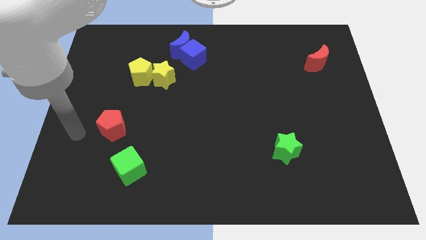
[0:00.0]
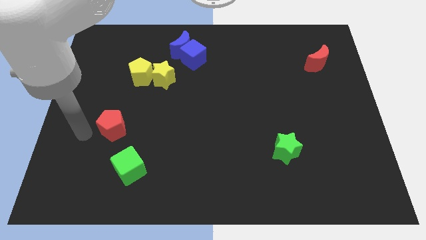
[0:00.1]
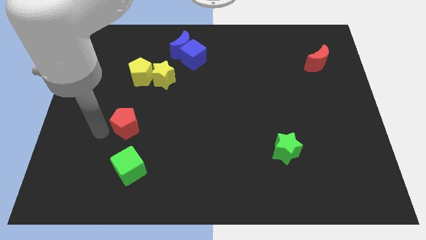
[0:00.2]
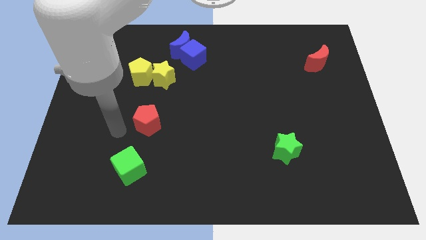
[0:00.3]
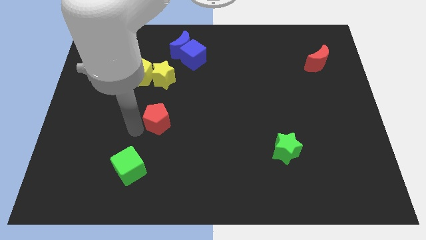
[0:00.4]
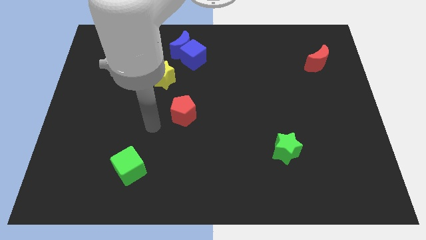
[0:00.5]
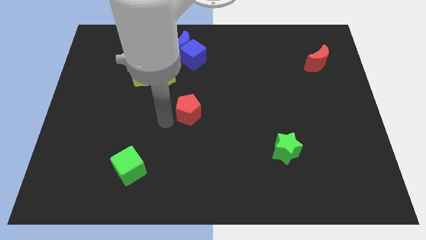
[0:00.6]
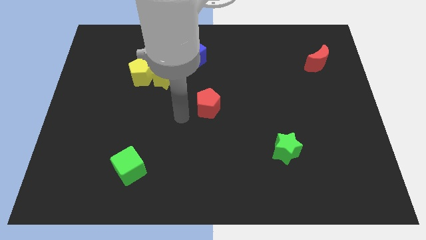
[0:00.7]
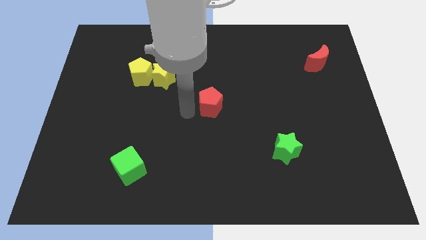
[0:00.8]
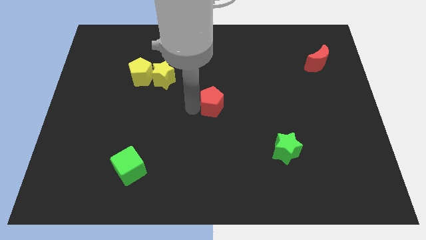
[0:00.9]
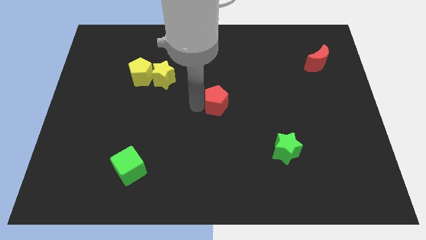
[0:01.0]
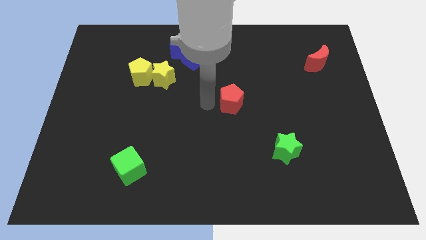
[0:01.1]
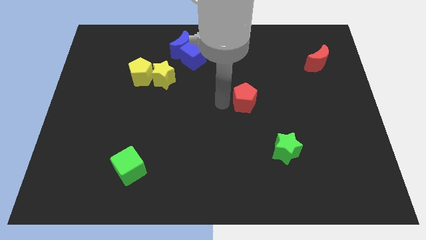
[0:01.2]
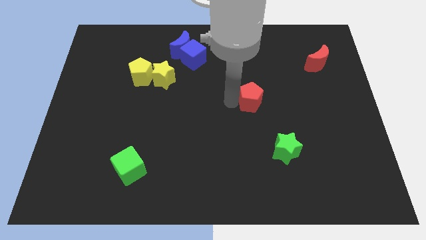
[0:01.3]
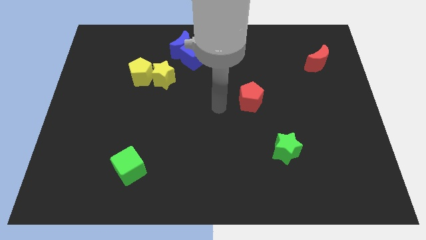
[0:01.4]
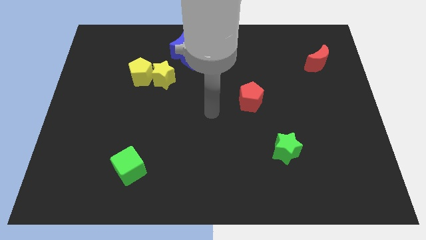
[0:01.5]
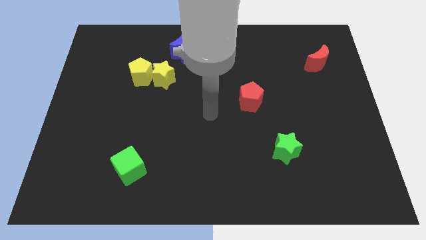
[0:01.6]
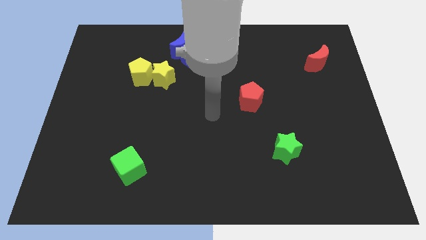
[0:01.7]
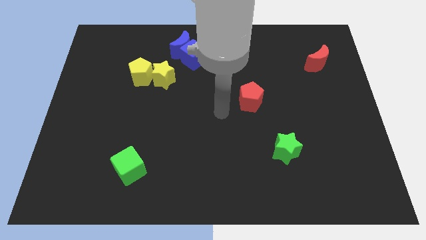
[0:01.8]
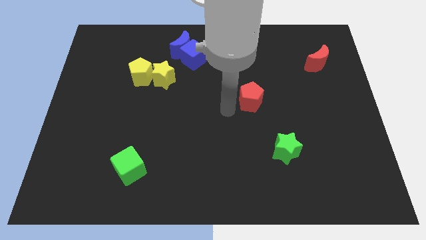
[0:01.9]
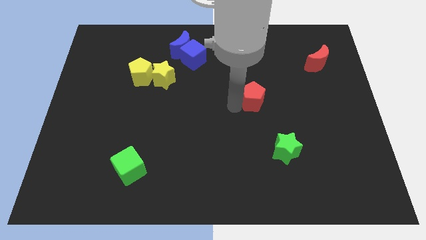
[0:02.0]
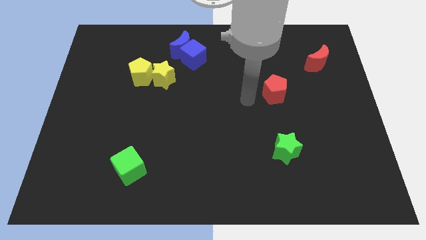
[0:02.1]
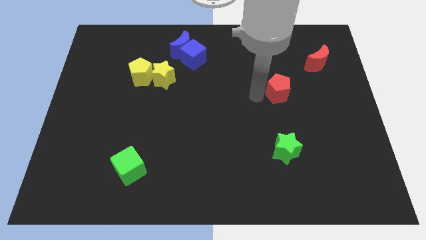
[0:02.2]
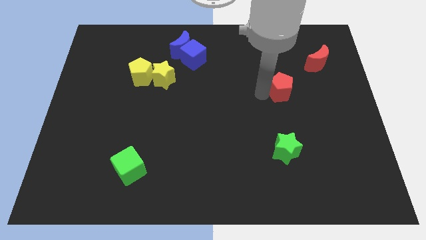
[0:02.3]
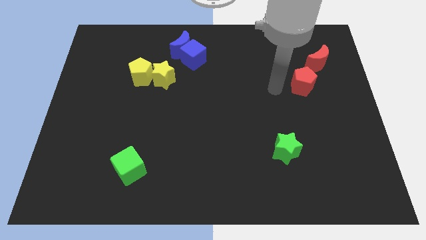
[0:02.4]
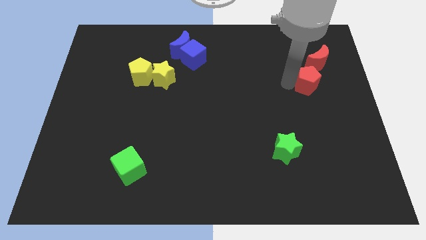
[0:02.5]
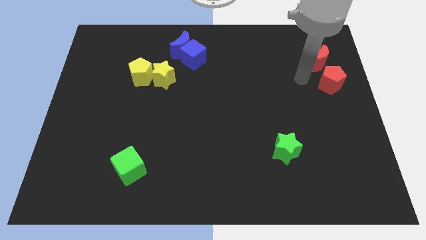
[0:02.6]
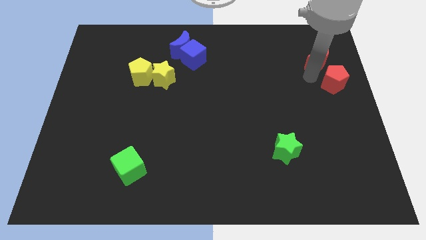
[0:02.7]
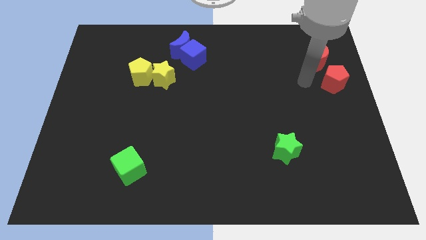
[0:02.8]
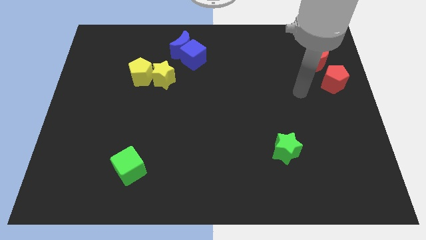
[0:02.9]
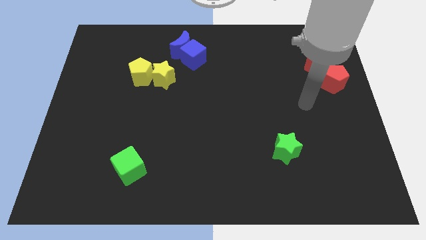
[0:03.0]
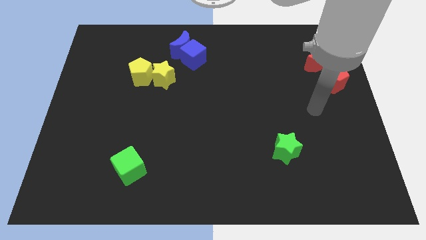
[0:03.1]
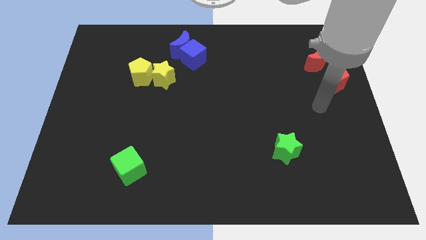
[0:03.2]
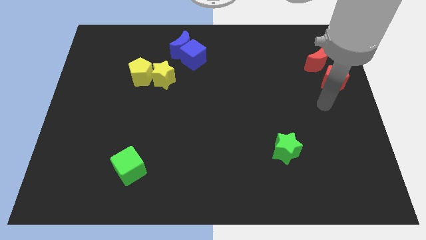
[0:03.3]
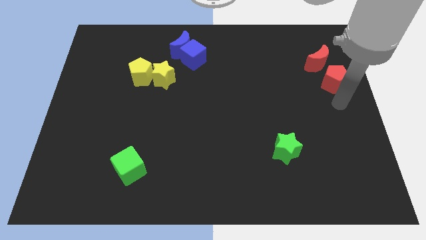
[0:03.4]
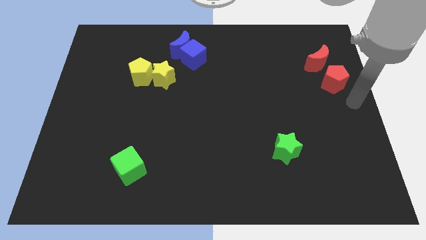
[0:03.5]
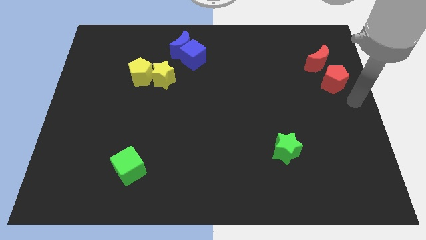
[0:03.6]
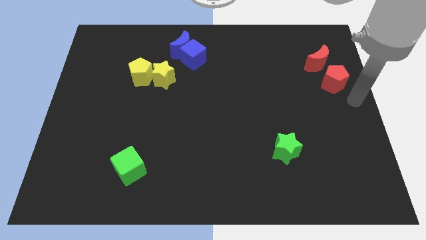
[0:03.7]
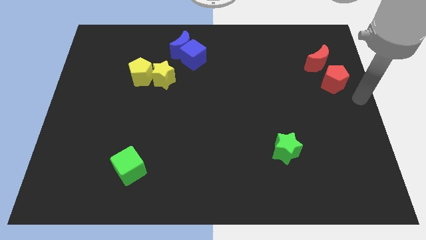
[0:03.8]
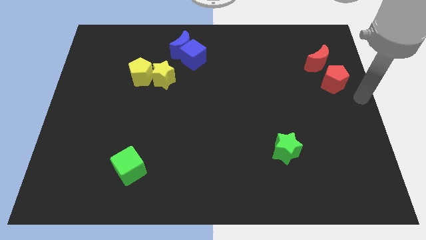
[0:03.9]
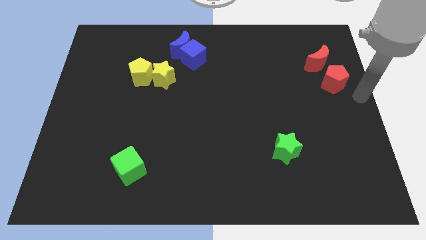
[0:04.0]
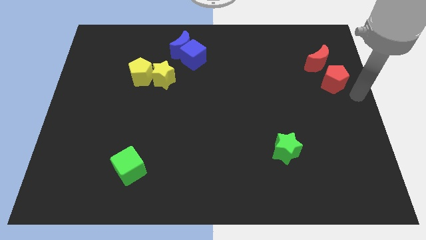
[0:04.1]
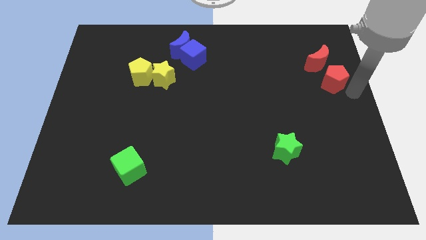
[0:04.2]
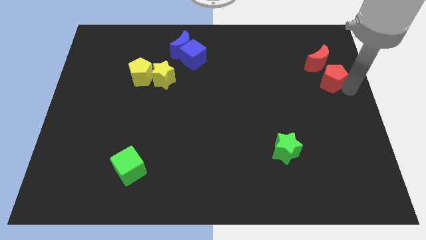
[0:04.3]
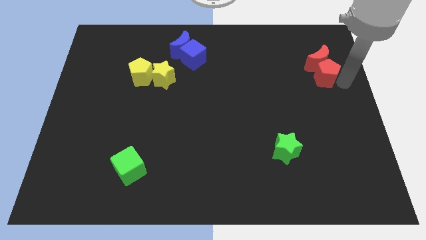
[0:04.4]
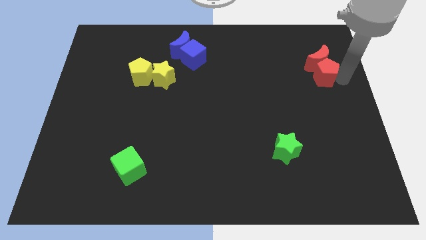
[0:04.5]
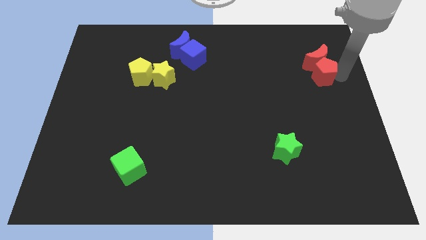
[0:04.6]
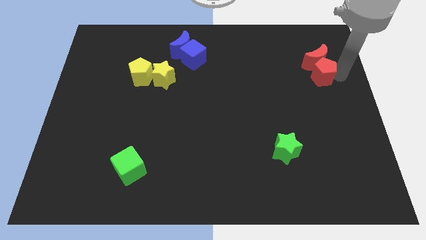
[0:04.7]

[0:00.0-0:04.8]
push the red pentagon into the red crescent

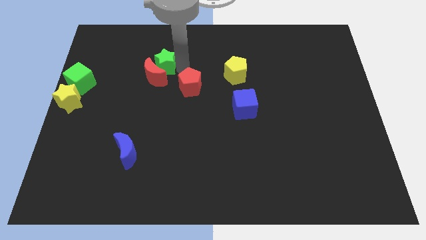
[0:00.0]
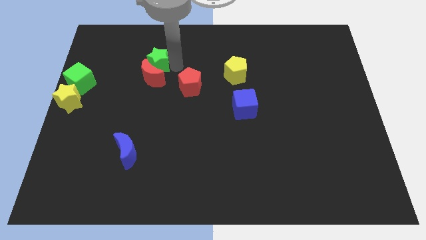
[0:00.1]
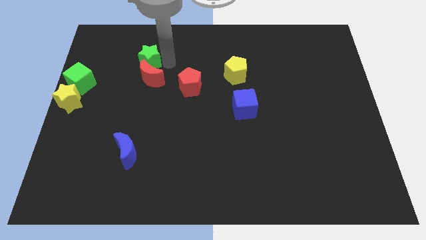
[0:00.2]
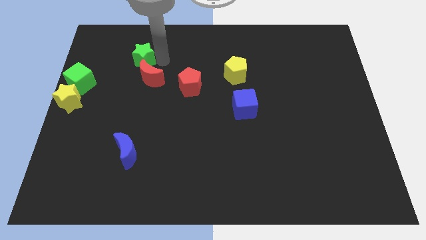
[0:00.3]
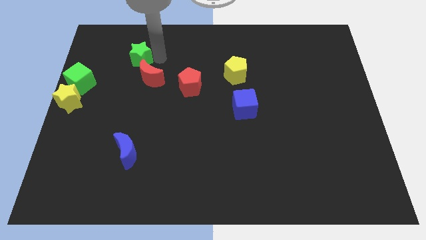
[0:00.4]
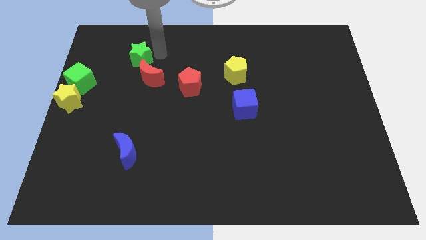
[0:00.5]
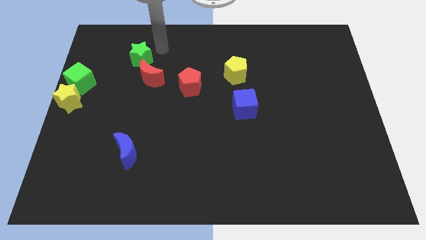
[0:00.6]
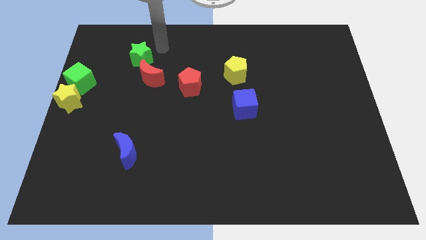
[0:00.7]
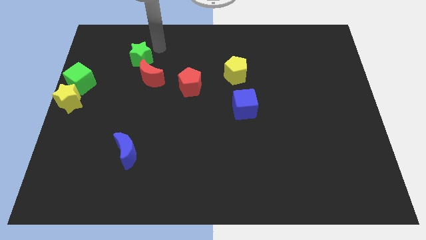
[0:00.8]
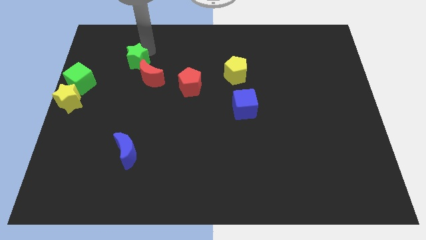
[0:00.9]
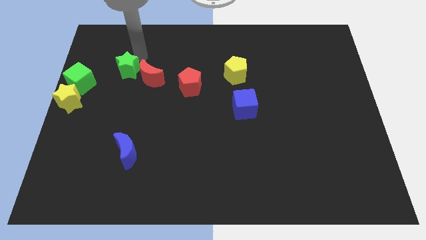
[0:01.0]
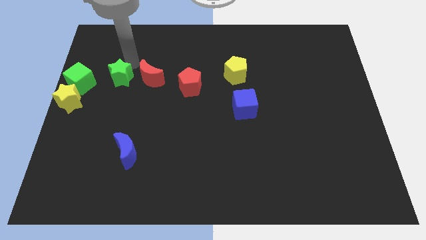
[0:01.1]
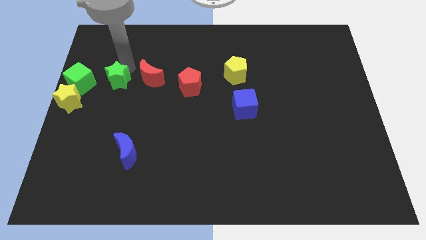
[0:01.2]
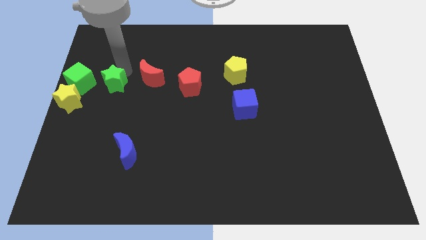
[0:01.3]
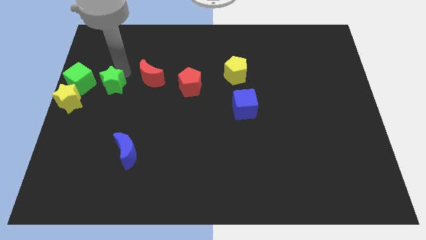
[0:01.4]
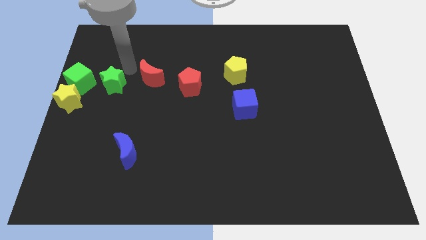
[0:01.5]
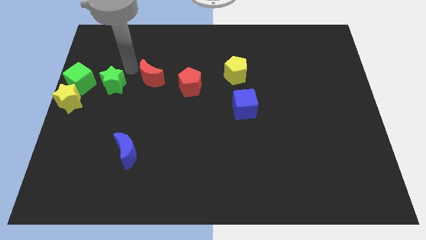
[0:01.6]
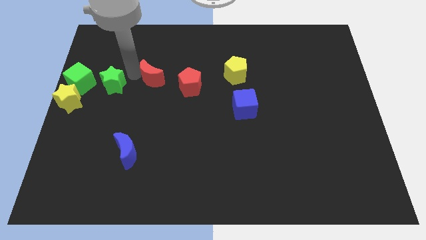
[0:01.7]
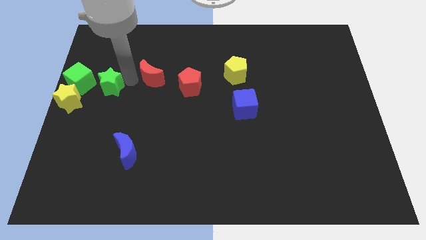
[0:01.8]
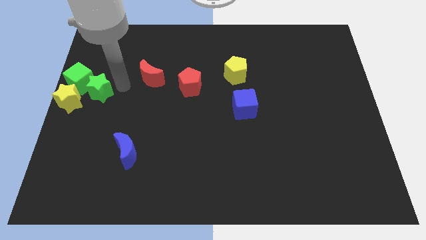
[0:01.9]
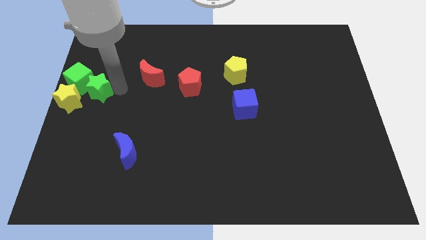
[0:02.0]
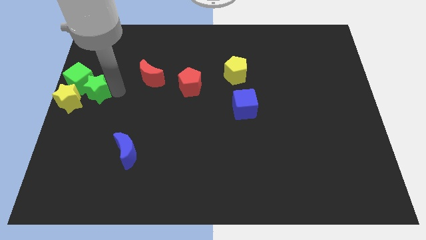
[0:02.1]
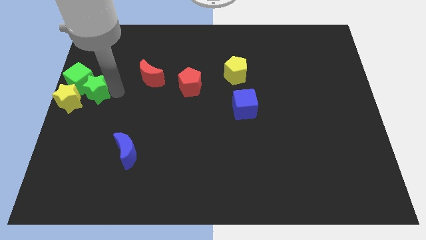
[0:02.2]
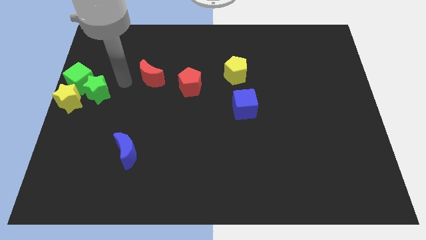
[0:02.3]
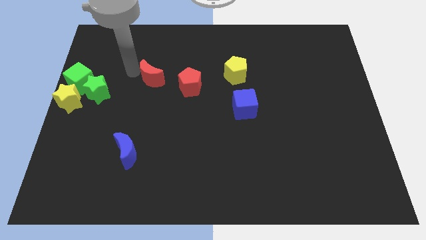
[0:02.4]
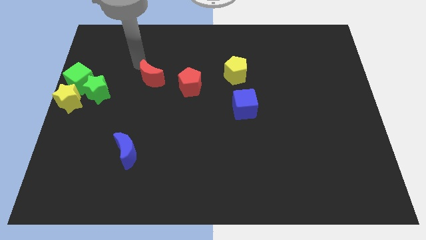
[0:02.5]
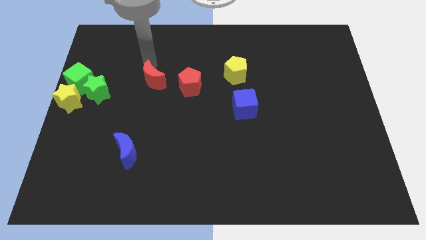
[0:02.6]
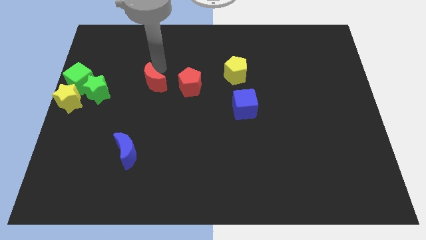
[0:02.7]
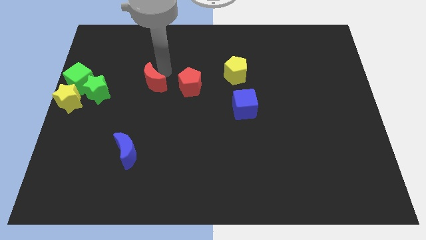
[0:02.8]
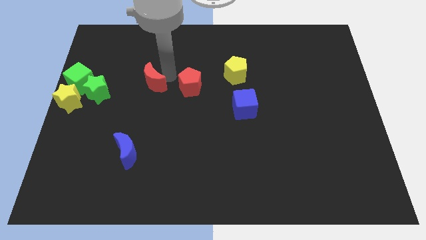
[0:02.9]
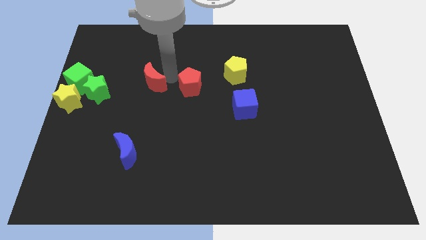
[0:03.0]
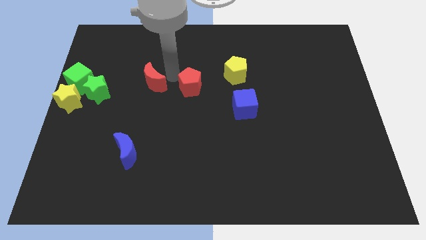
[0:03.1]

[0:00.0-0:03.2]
tap the red crescent

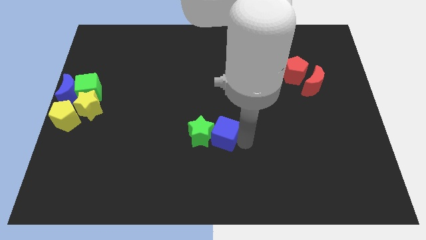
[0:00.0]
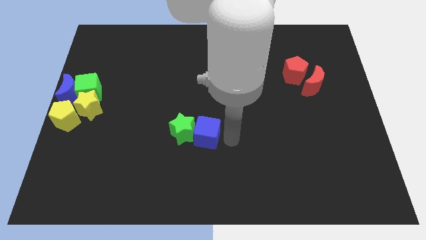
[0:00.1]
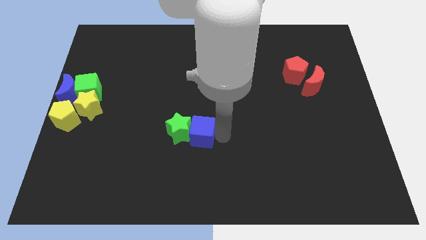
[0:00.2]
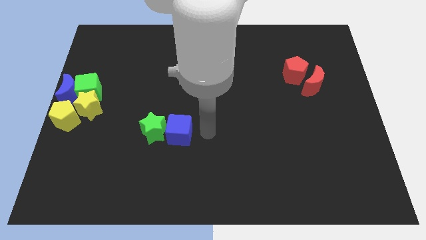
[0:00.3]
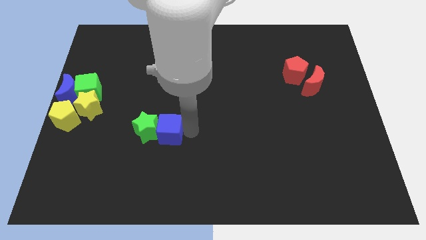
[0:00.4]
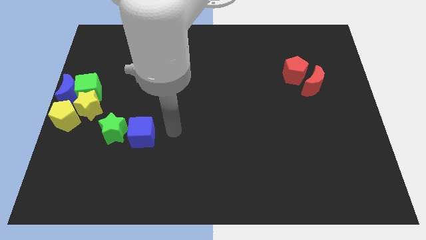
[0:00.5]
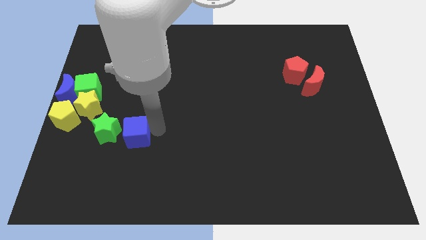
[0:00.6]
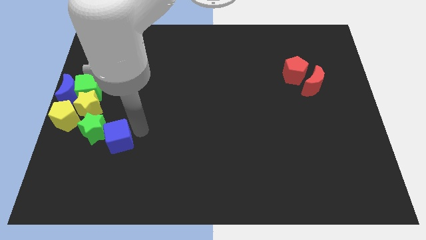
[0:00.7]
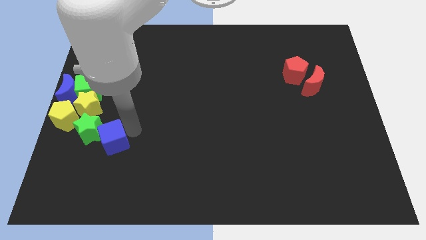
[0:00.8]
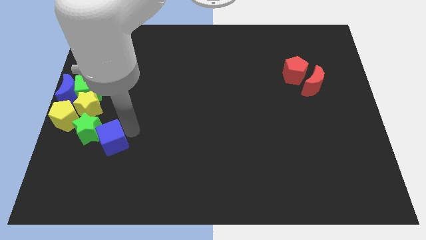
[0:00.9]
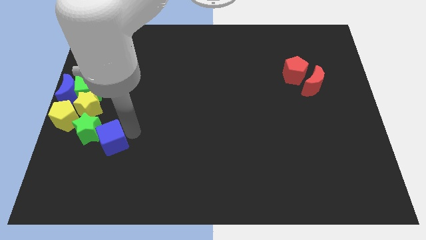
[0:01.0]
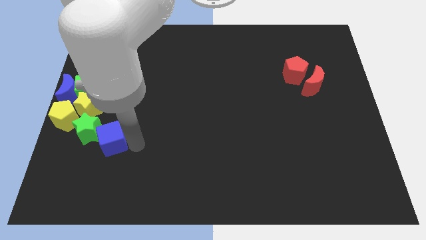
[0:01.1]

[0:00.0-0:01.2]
push the green star with the blue cube towards the left center of the board
